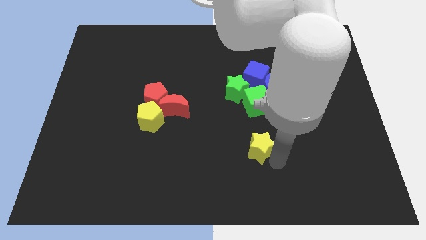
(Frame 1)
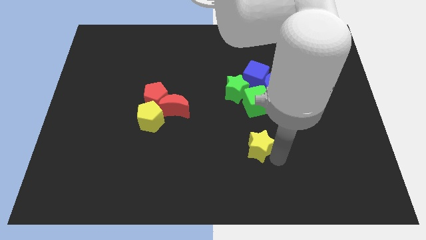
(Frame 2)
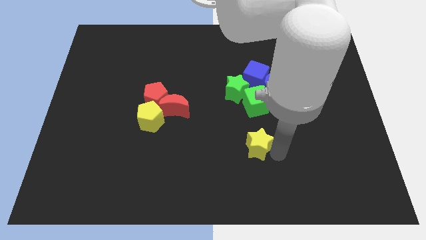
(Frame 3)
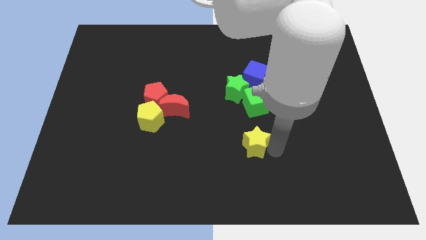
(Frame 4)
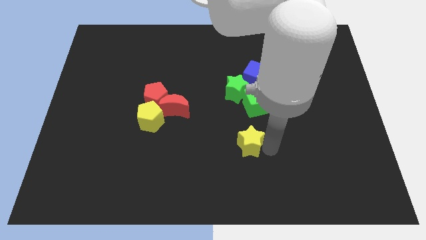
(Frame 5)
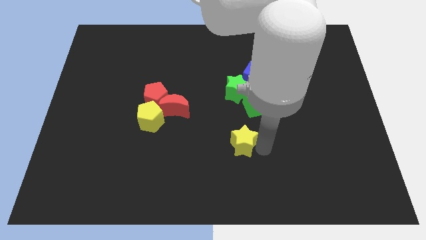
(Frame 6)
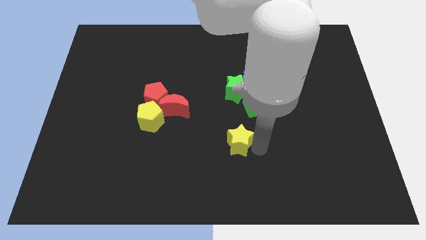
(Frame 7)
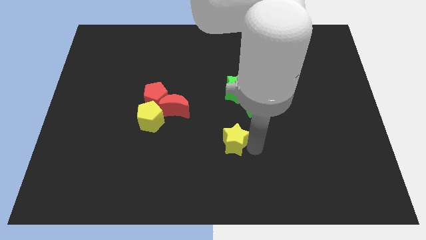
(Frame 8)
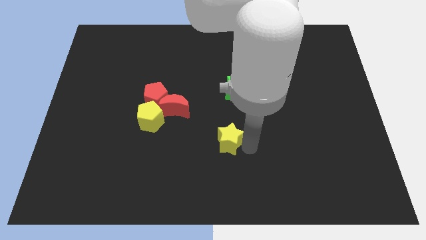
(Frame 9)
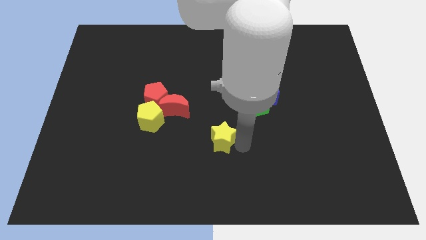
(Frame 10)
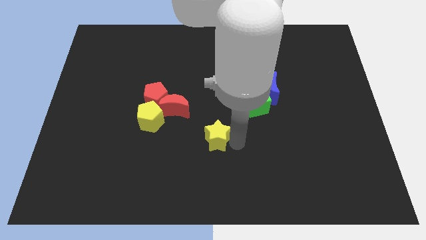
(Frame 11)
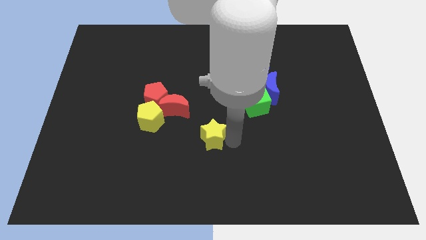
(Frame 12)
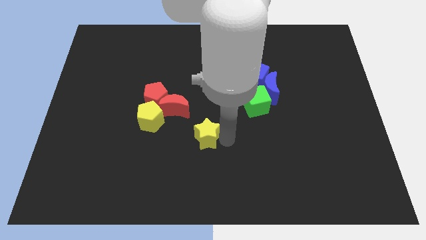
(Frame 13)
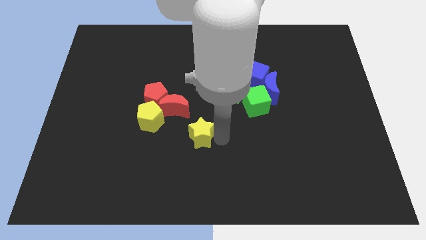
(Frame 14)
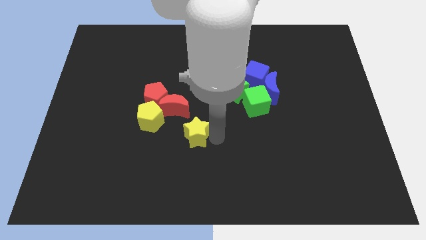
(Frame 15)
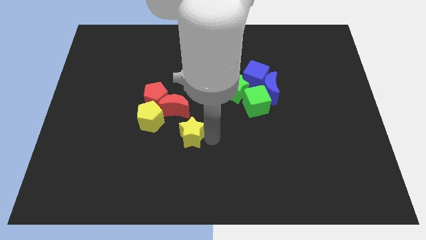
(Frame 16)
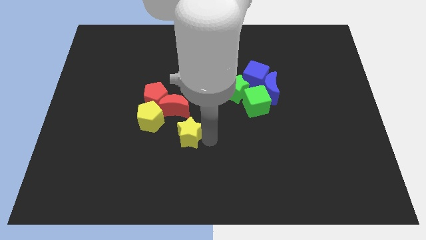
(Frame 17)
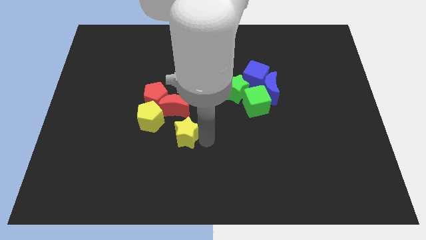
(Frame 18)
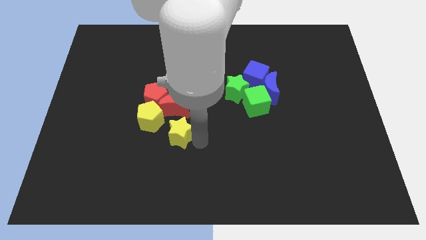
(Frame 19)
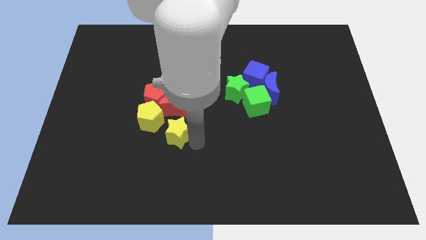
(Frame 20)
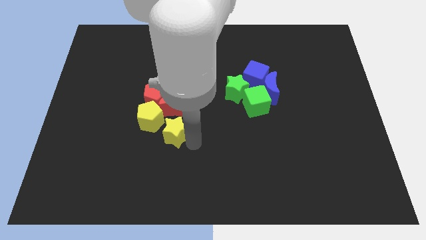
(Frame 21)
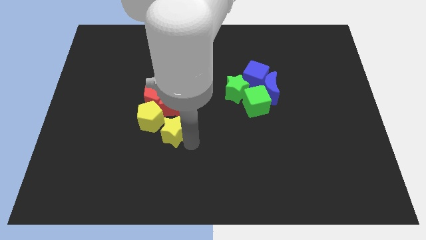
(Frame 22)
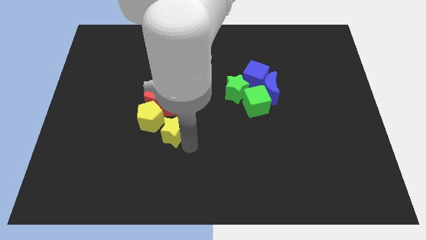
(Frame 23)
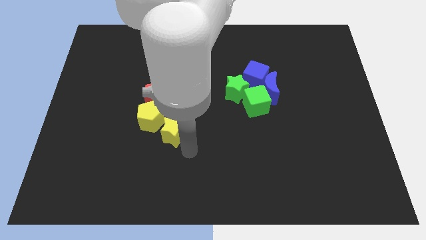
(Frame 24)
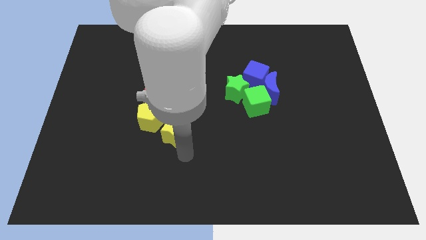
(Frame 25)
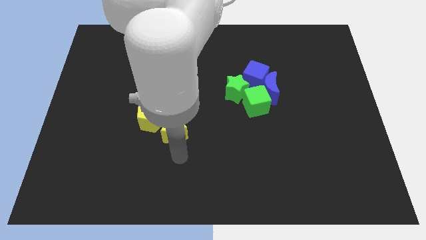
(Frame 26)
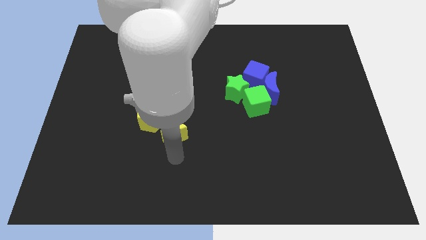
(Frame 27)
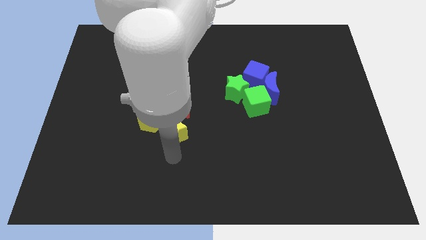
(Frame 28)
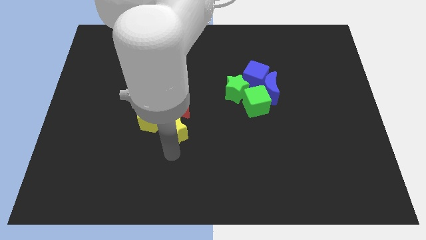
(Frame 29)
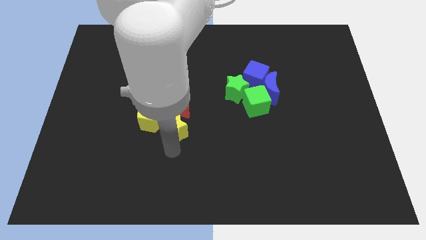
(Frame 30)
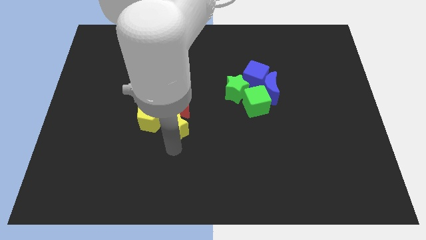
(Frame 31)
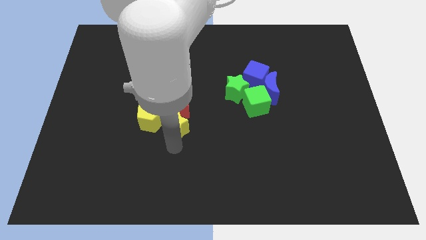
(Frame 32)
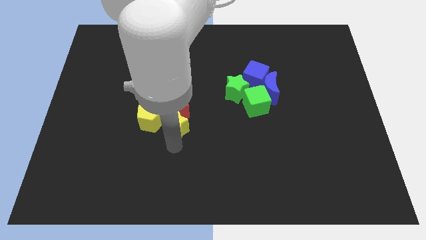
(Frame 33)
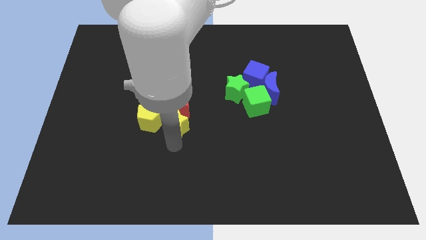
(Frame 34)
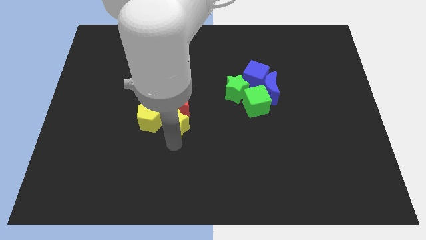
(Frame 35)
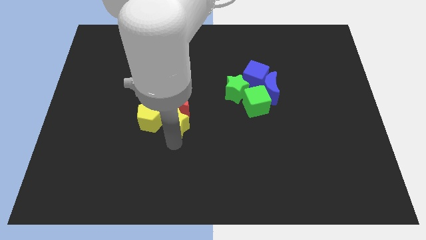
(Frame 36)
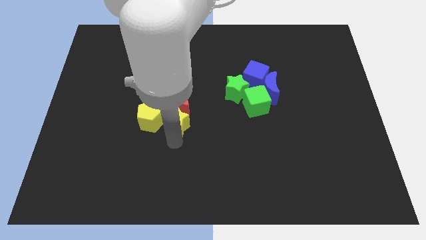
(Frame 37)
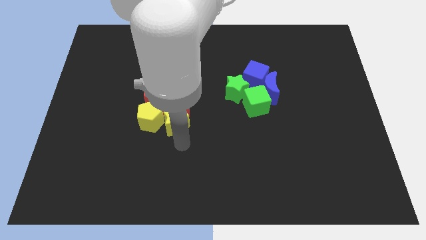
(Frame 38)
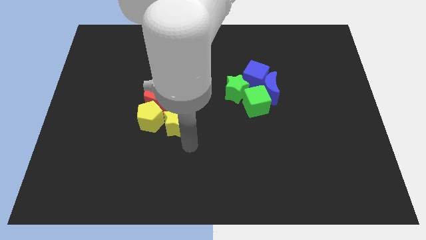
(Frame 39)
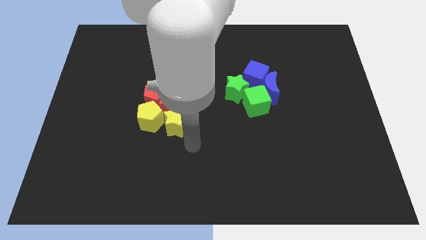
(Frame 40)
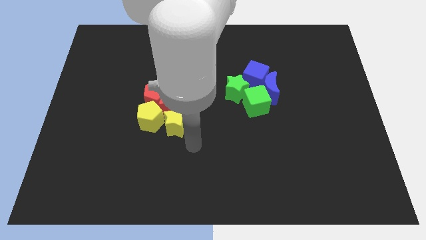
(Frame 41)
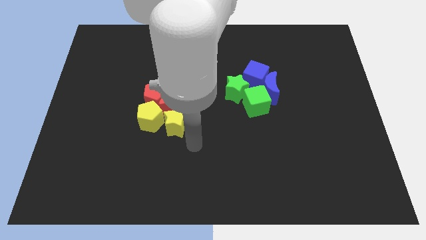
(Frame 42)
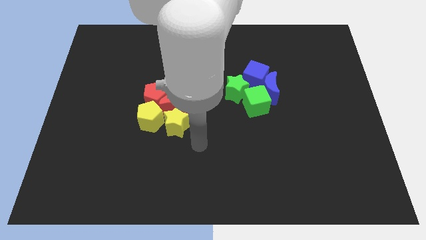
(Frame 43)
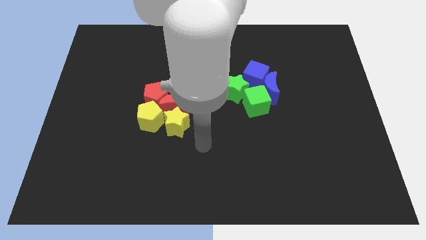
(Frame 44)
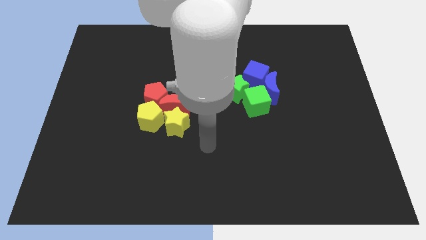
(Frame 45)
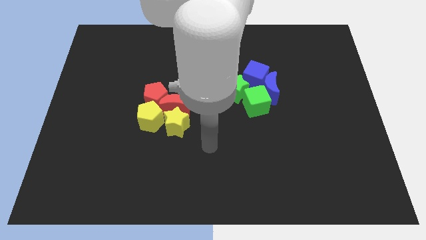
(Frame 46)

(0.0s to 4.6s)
push the yellow star into the red blocks and yellow pentagon

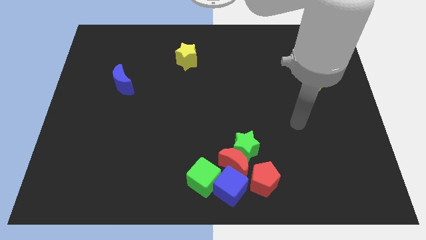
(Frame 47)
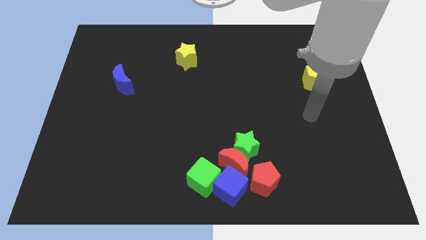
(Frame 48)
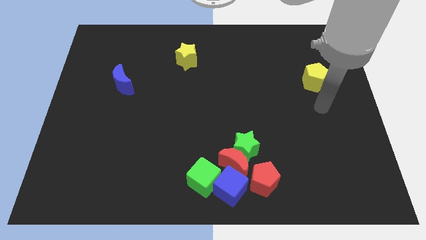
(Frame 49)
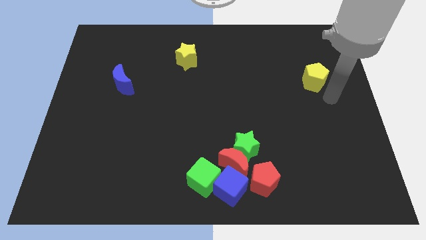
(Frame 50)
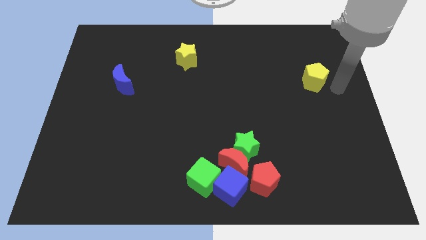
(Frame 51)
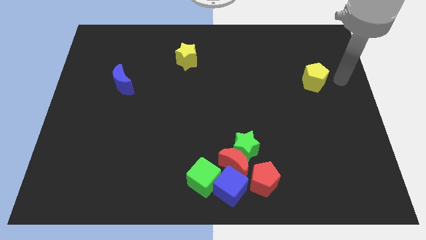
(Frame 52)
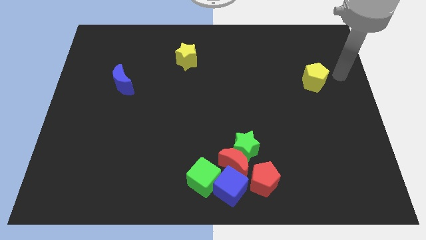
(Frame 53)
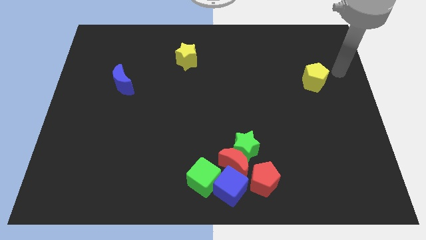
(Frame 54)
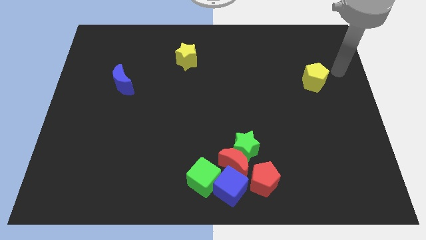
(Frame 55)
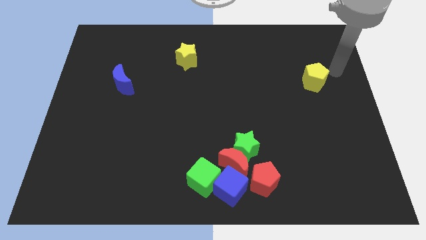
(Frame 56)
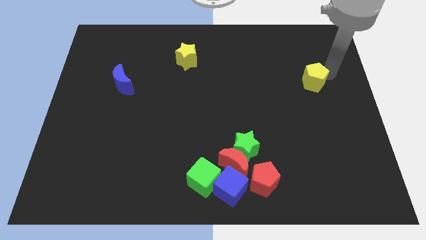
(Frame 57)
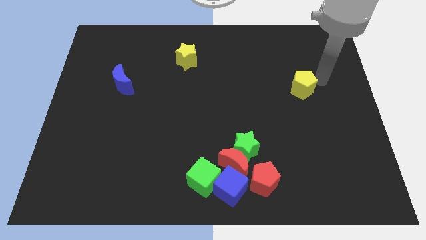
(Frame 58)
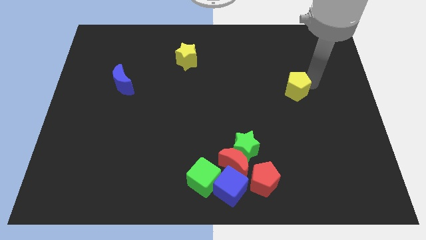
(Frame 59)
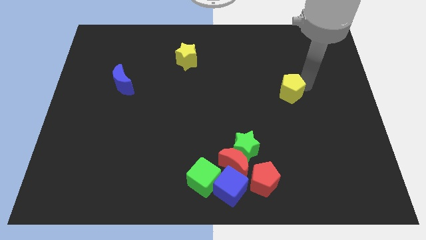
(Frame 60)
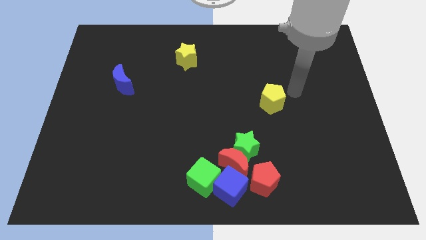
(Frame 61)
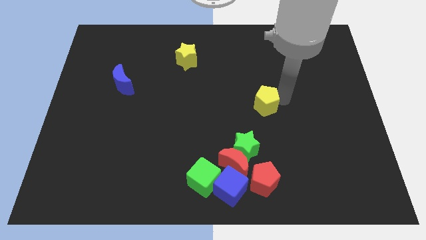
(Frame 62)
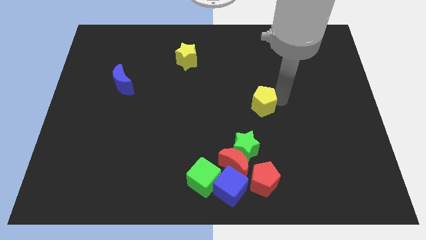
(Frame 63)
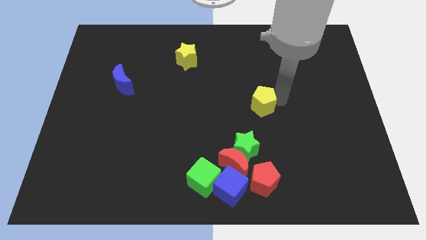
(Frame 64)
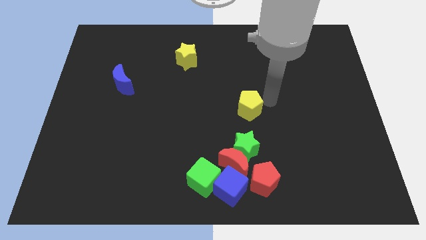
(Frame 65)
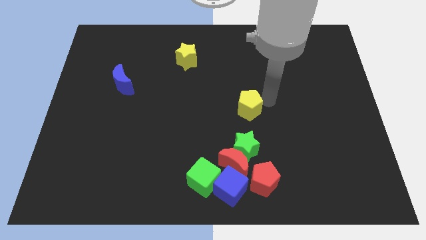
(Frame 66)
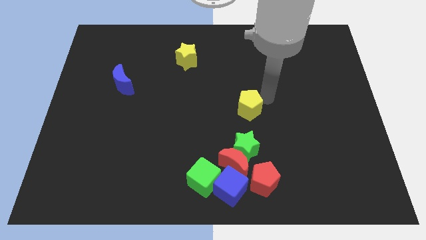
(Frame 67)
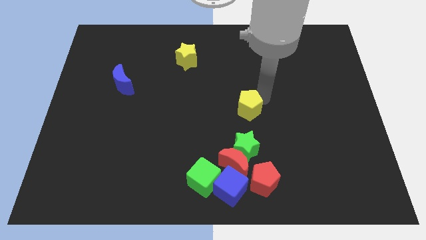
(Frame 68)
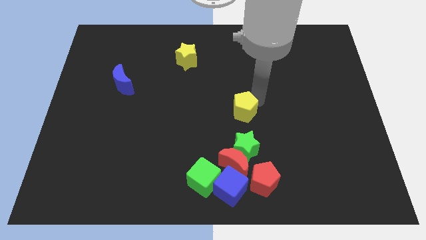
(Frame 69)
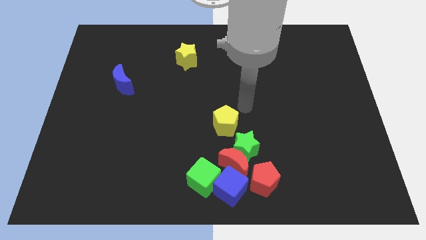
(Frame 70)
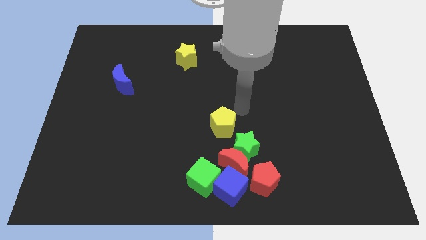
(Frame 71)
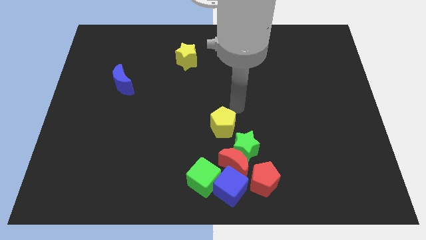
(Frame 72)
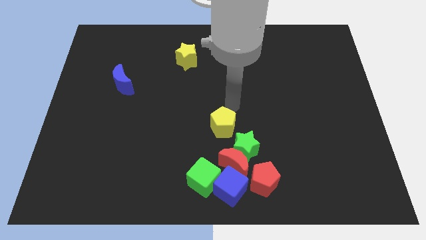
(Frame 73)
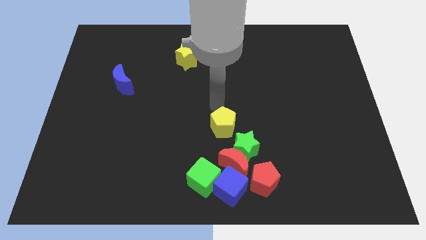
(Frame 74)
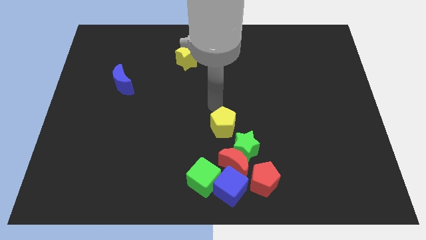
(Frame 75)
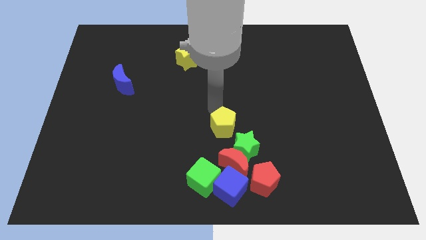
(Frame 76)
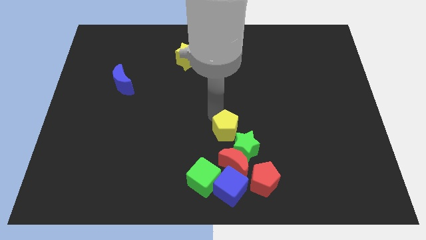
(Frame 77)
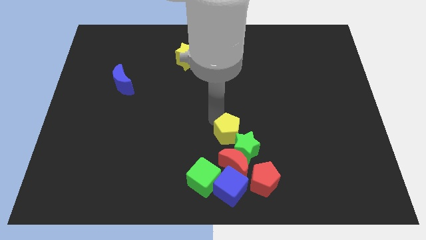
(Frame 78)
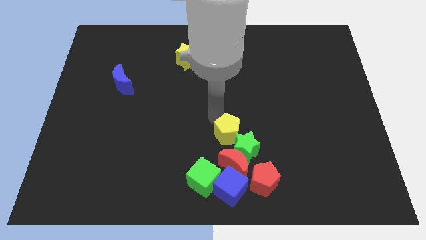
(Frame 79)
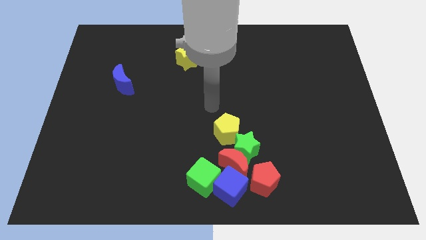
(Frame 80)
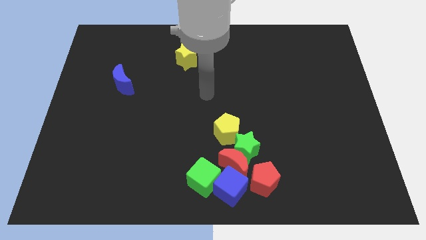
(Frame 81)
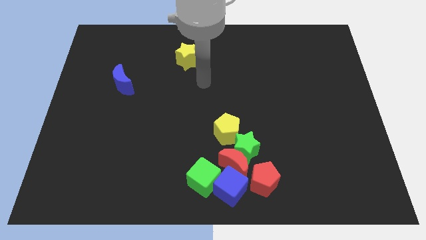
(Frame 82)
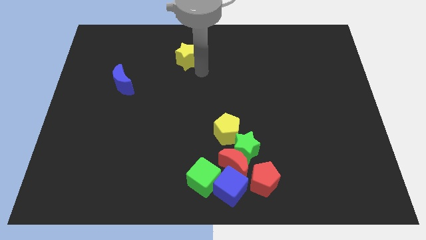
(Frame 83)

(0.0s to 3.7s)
push the yellow pentagon into green star

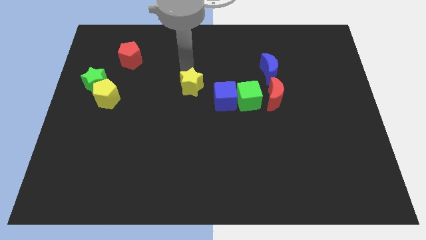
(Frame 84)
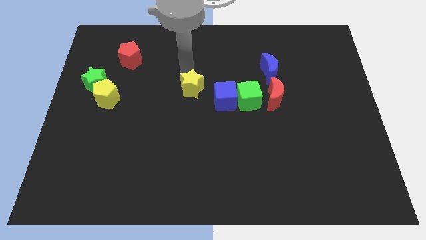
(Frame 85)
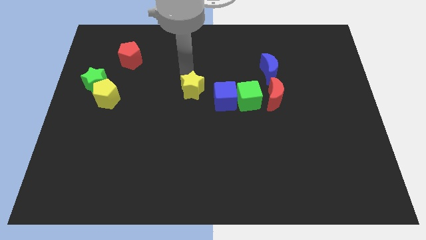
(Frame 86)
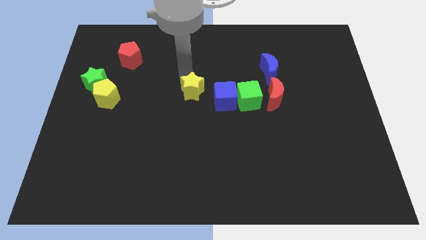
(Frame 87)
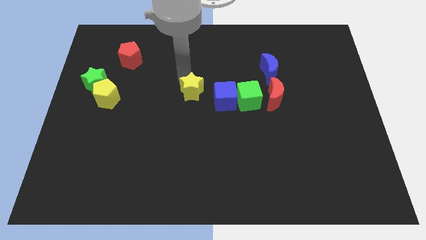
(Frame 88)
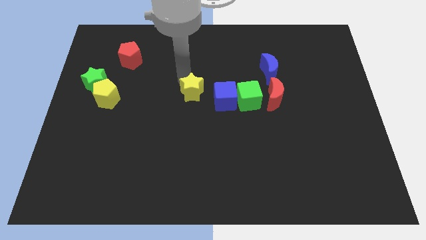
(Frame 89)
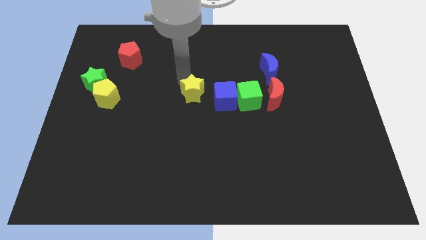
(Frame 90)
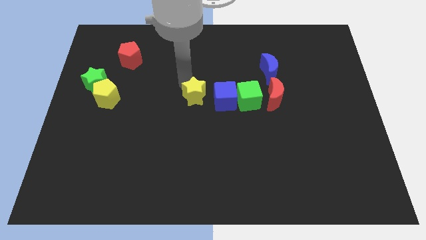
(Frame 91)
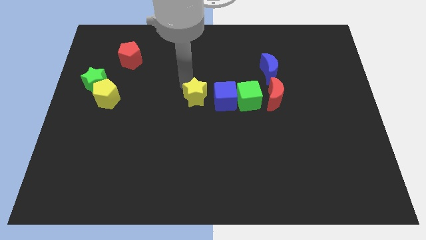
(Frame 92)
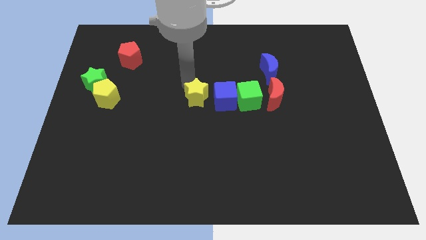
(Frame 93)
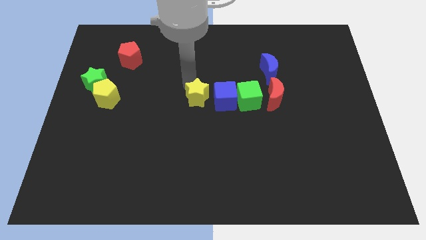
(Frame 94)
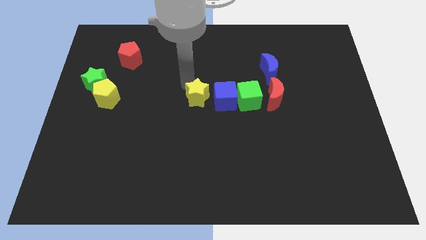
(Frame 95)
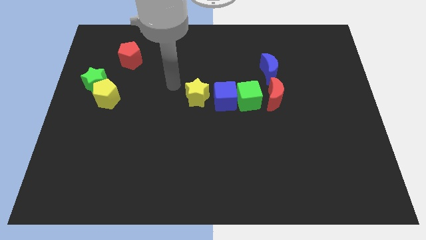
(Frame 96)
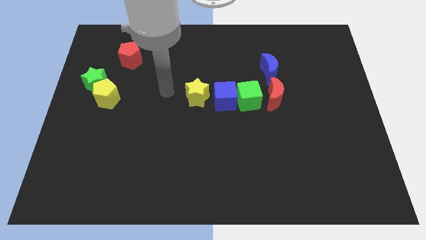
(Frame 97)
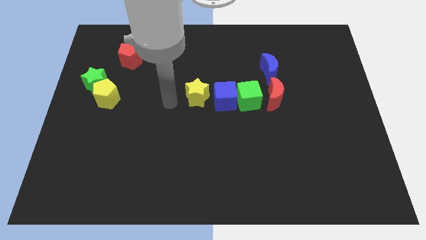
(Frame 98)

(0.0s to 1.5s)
place the yellow star parallel to the yellow pentagon
